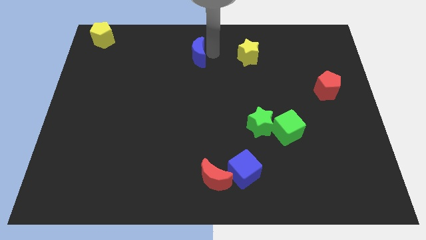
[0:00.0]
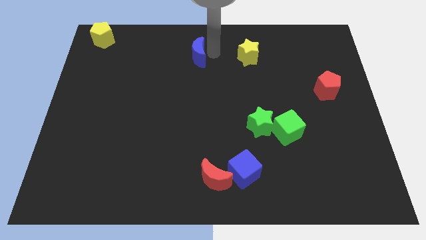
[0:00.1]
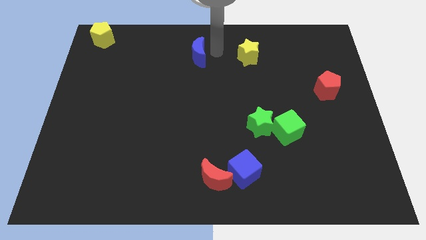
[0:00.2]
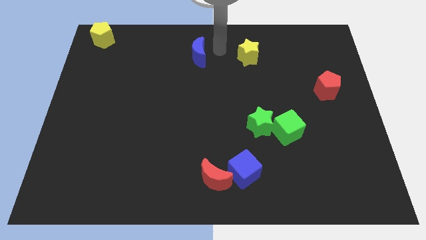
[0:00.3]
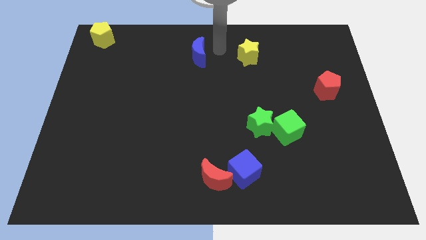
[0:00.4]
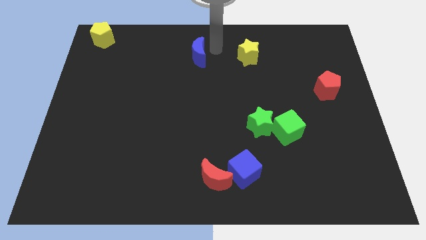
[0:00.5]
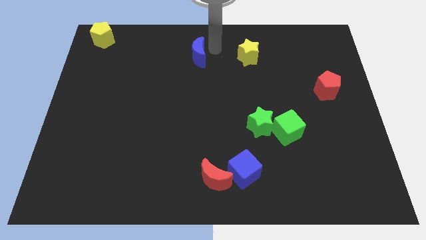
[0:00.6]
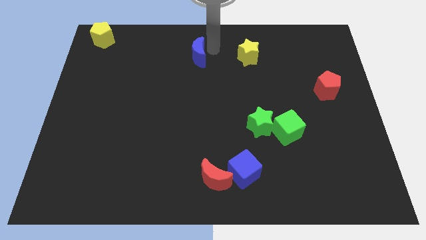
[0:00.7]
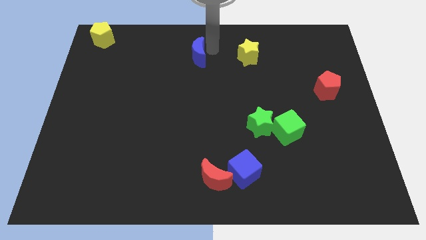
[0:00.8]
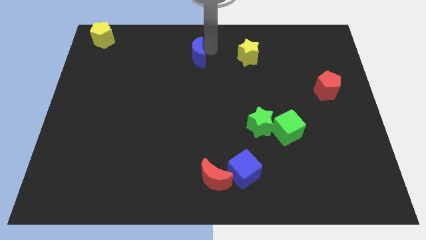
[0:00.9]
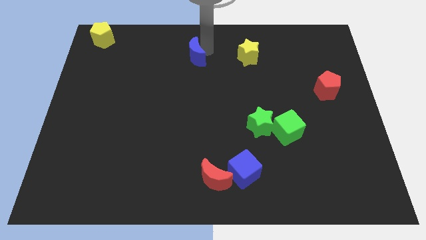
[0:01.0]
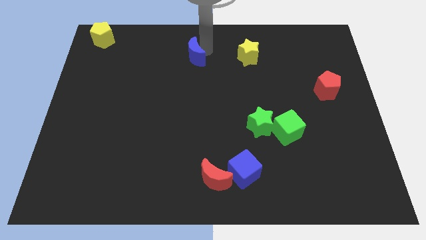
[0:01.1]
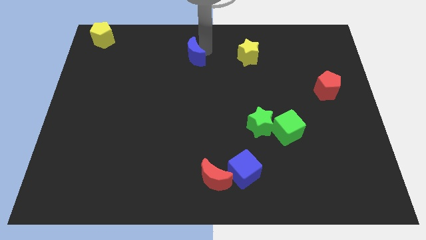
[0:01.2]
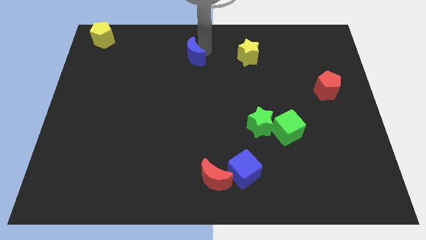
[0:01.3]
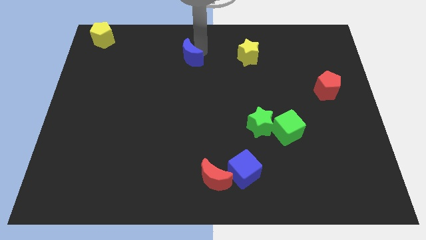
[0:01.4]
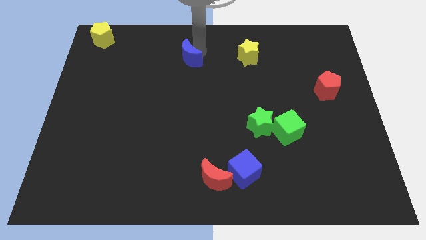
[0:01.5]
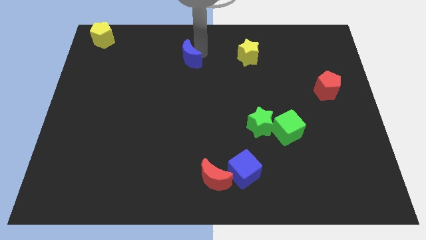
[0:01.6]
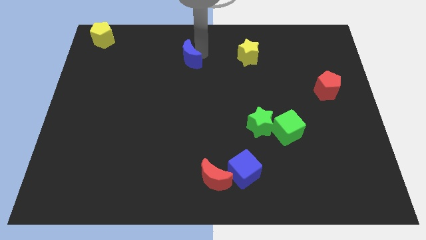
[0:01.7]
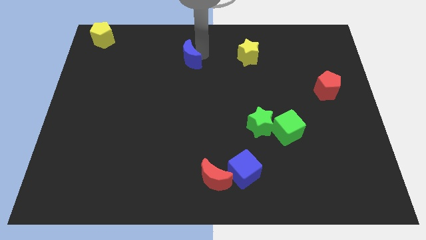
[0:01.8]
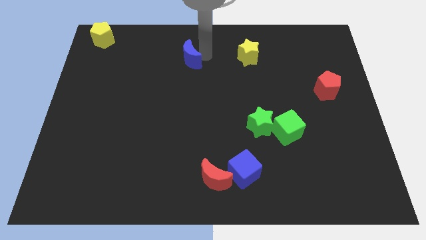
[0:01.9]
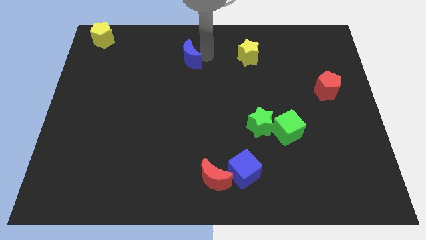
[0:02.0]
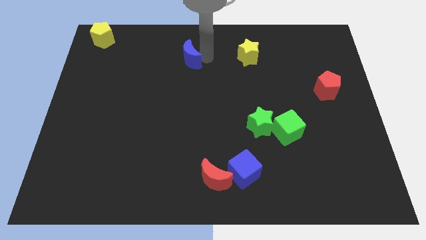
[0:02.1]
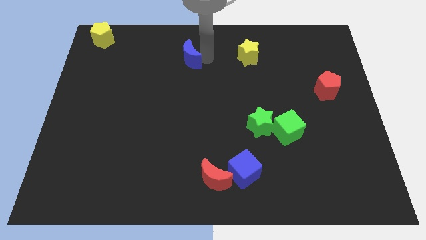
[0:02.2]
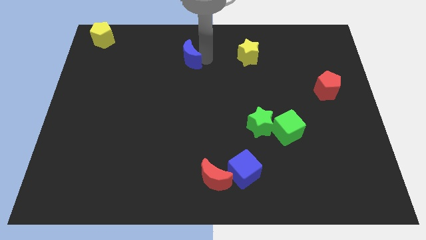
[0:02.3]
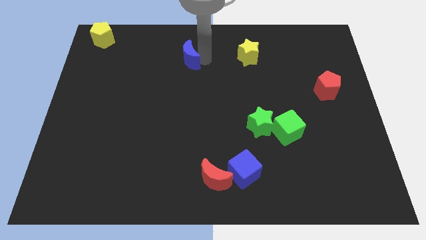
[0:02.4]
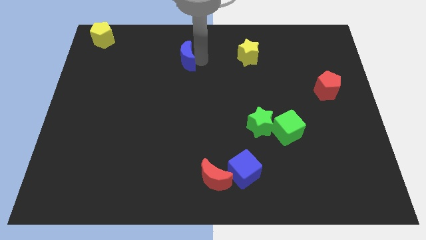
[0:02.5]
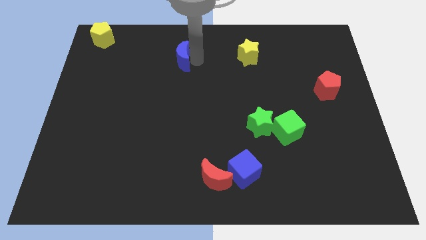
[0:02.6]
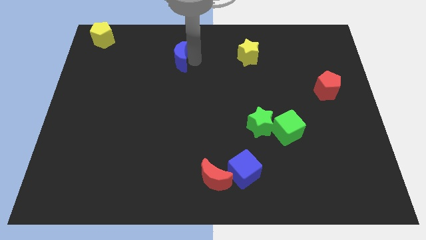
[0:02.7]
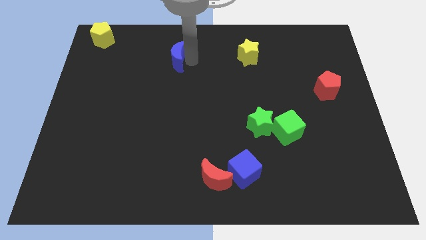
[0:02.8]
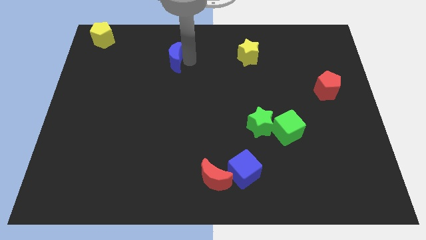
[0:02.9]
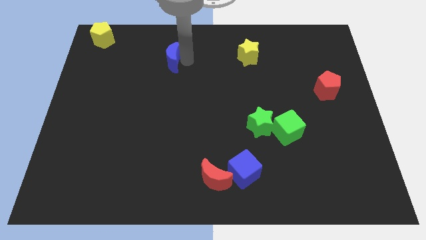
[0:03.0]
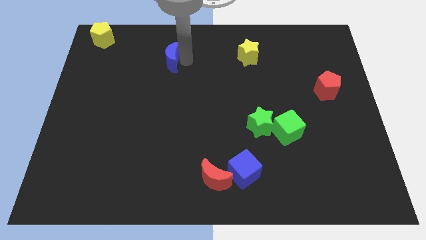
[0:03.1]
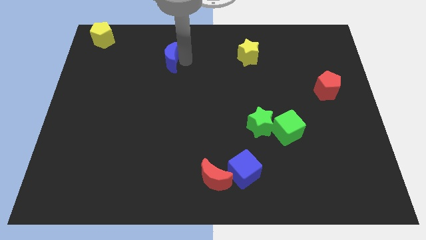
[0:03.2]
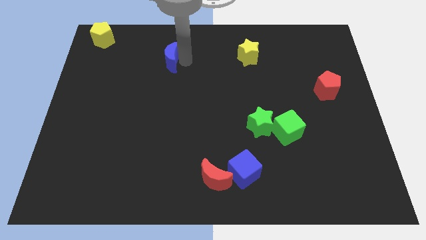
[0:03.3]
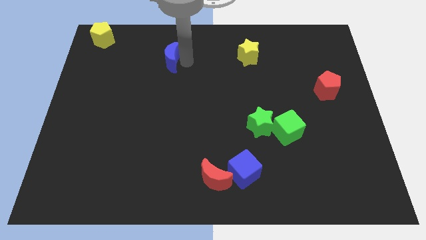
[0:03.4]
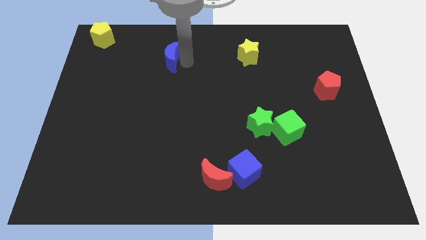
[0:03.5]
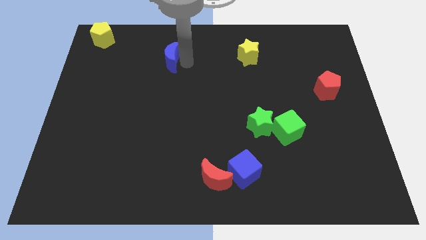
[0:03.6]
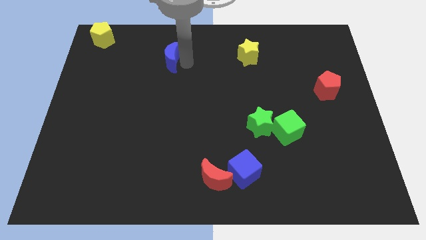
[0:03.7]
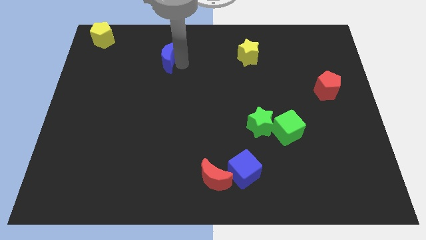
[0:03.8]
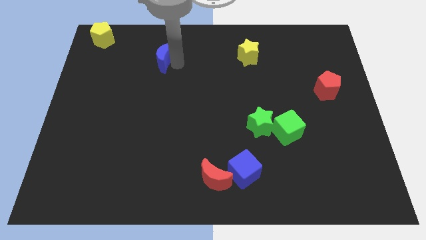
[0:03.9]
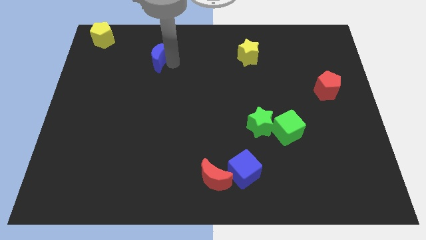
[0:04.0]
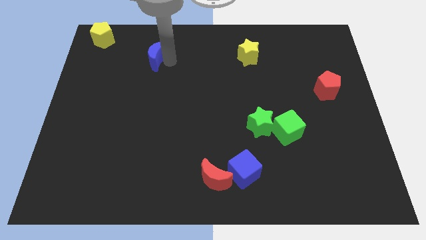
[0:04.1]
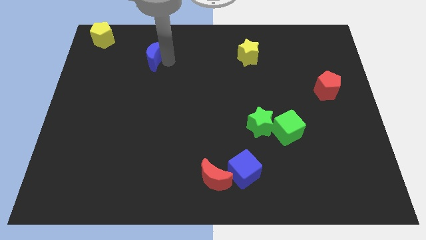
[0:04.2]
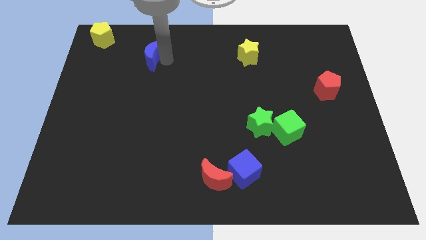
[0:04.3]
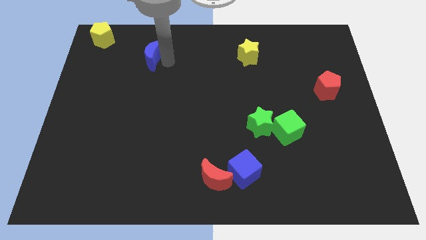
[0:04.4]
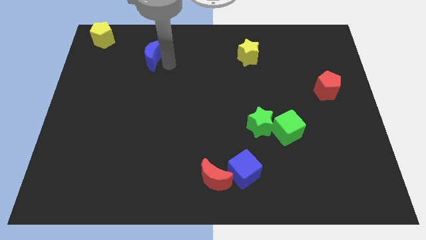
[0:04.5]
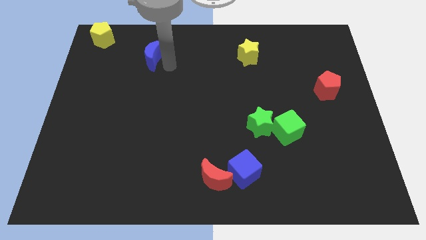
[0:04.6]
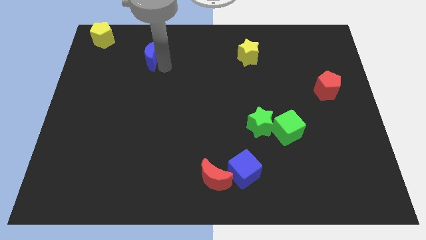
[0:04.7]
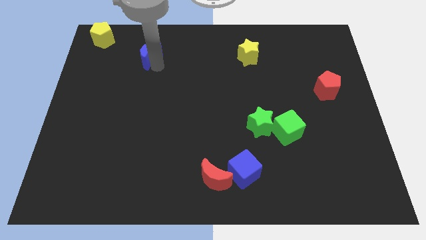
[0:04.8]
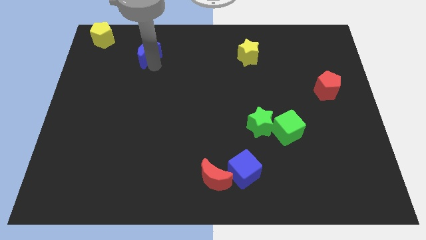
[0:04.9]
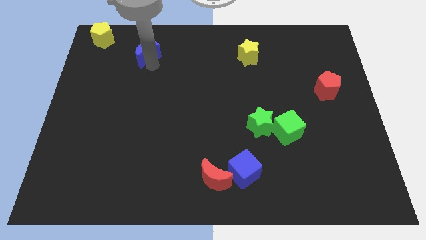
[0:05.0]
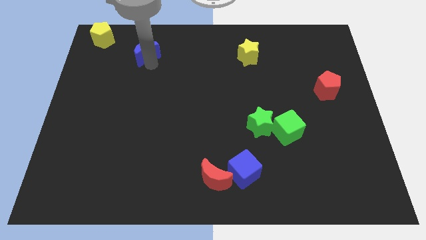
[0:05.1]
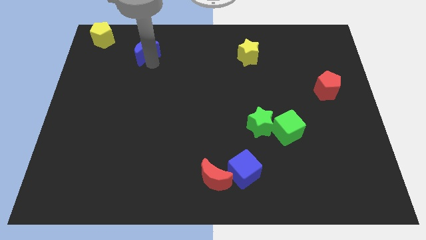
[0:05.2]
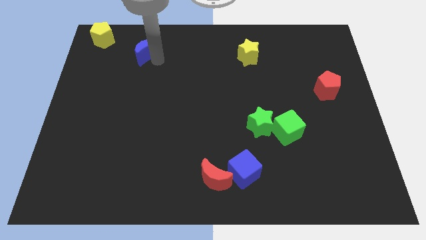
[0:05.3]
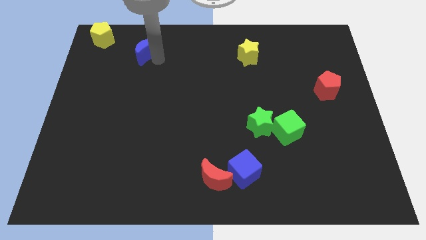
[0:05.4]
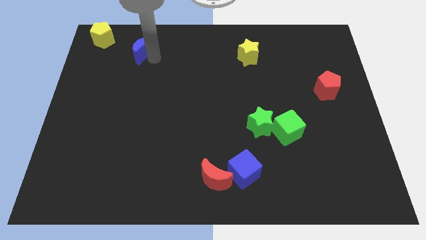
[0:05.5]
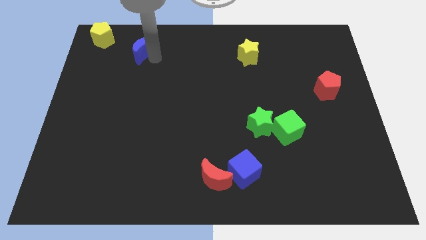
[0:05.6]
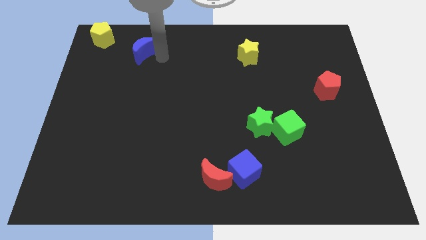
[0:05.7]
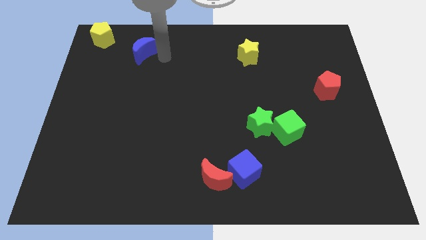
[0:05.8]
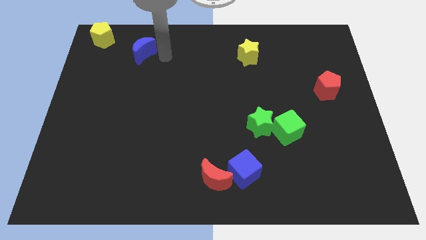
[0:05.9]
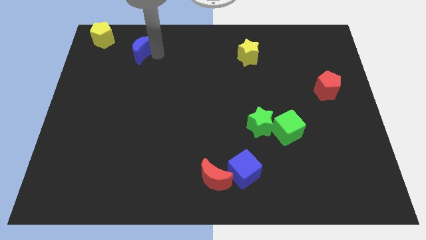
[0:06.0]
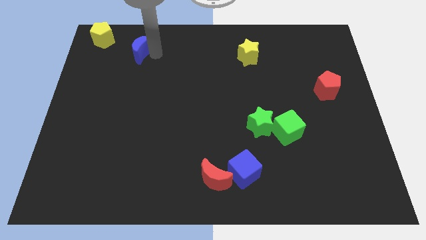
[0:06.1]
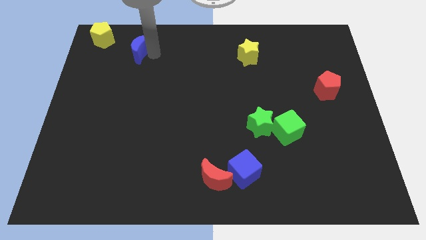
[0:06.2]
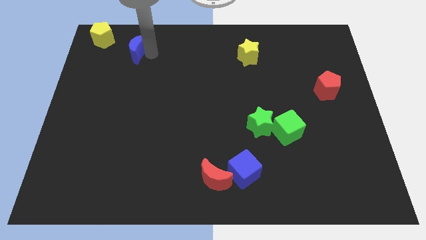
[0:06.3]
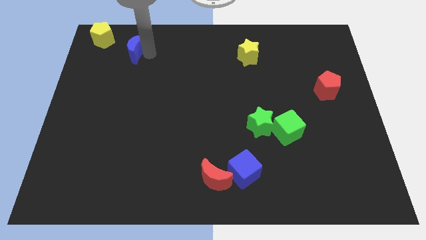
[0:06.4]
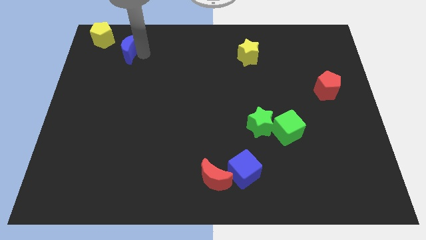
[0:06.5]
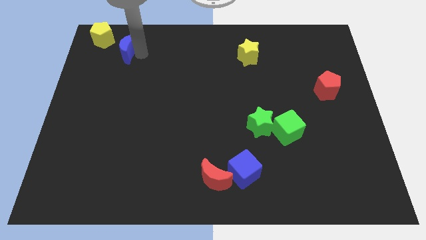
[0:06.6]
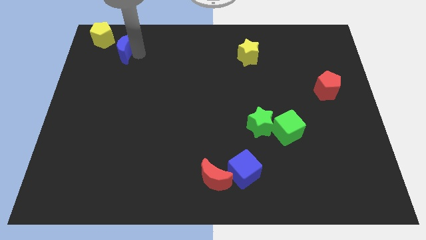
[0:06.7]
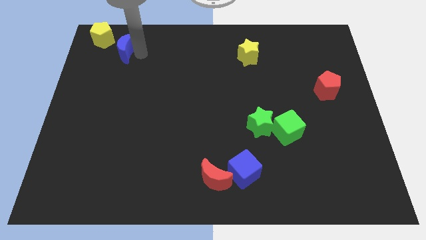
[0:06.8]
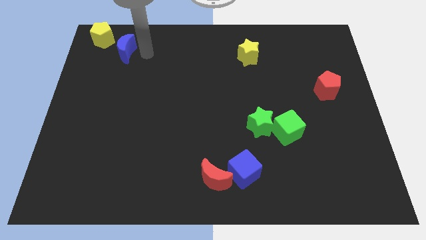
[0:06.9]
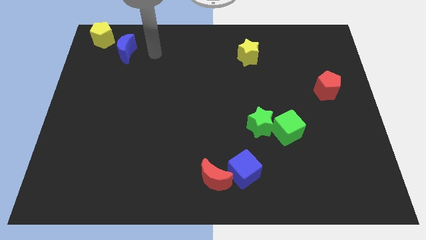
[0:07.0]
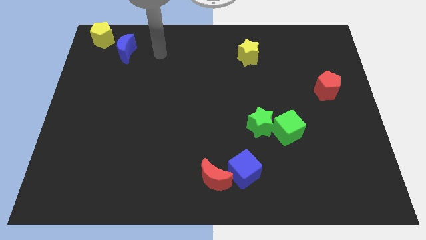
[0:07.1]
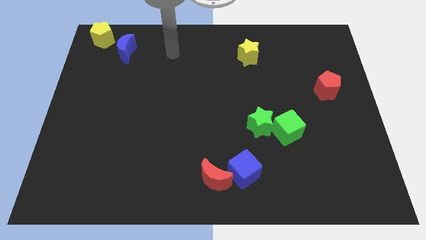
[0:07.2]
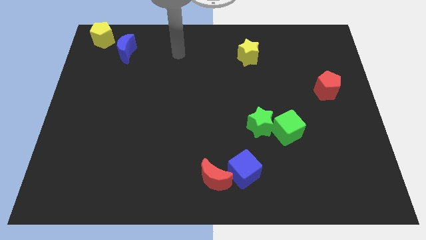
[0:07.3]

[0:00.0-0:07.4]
push the blue moon towards yellow pentagon

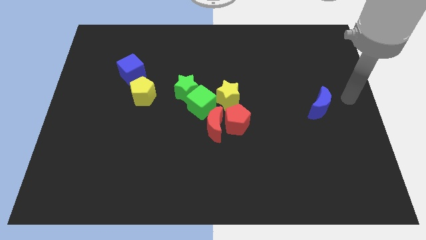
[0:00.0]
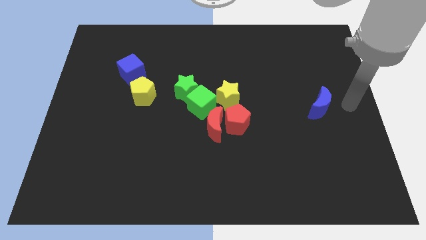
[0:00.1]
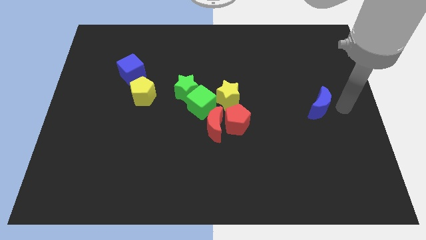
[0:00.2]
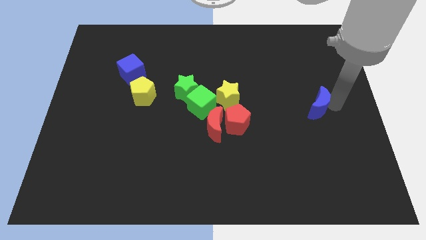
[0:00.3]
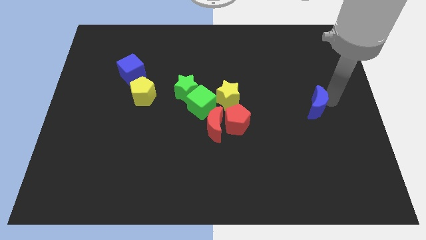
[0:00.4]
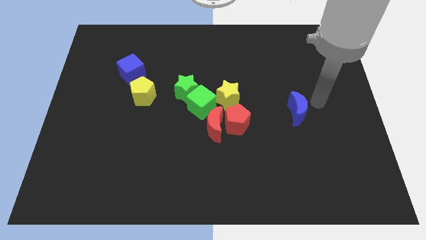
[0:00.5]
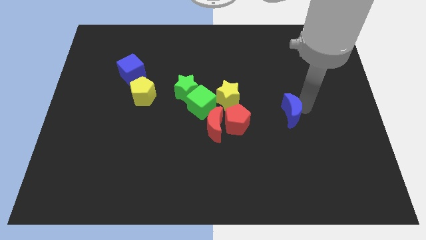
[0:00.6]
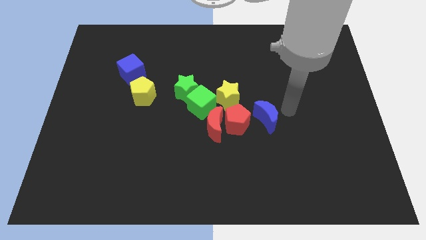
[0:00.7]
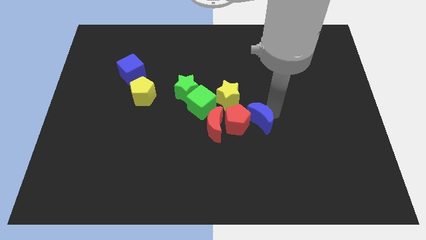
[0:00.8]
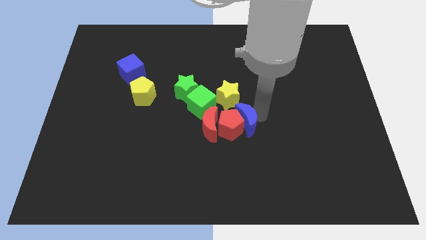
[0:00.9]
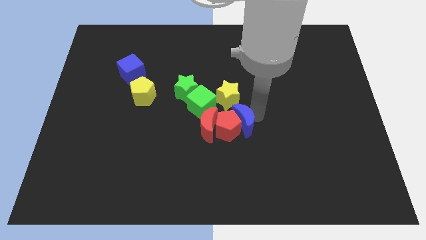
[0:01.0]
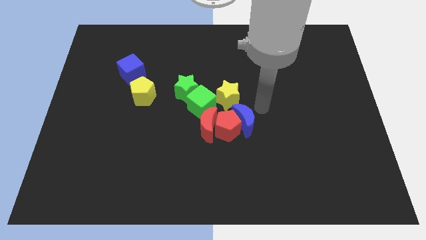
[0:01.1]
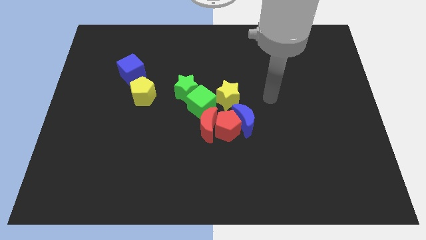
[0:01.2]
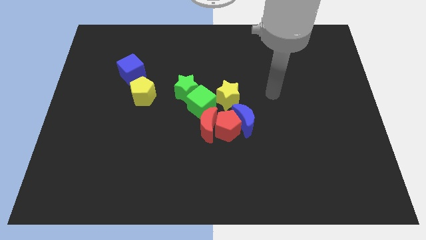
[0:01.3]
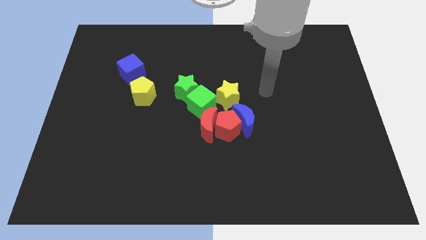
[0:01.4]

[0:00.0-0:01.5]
push blue crescent into red pentagon

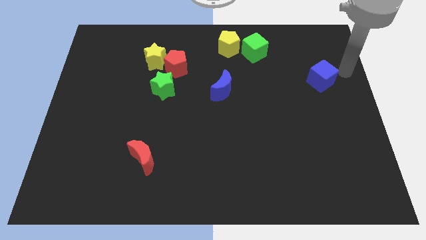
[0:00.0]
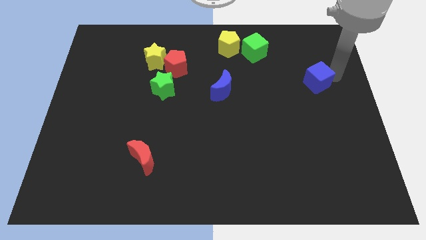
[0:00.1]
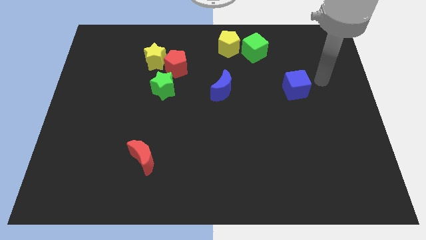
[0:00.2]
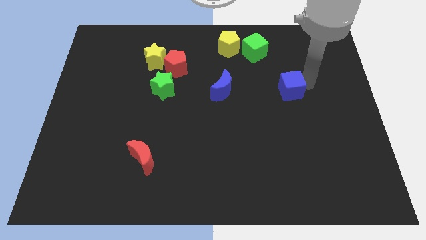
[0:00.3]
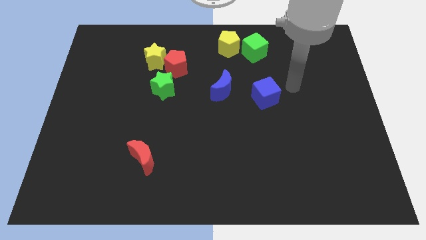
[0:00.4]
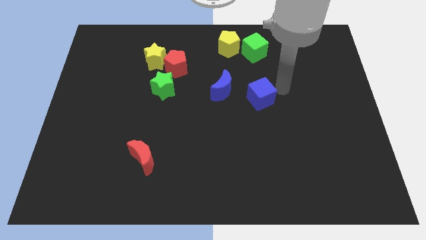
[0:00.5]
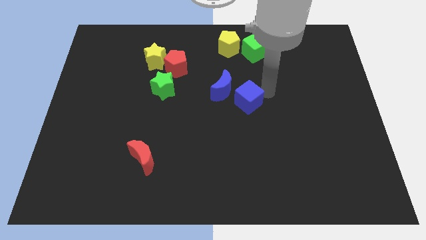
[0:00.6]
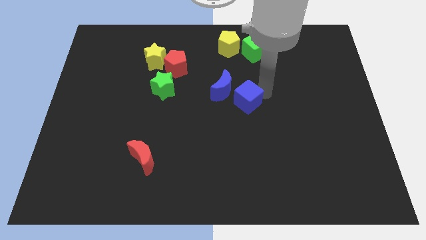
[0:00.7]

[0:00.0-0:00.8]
push blue cube below green cube
